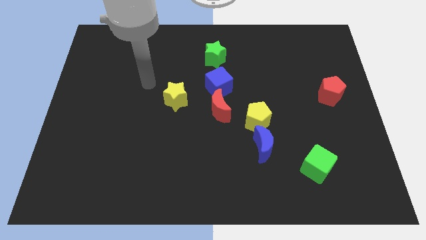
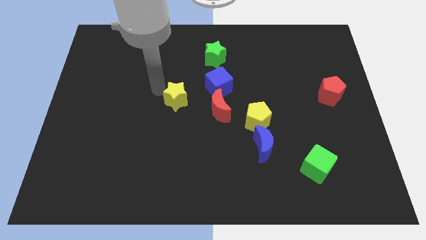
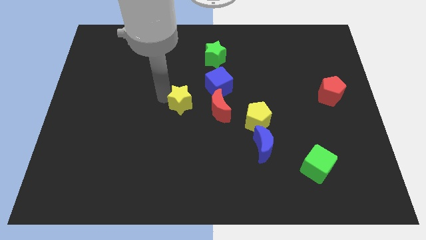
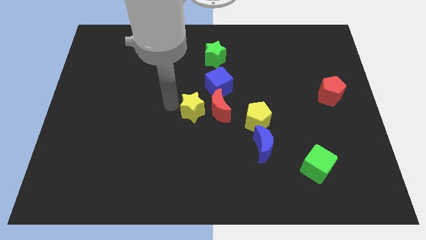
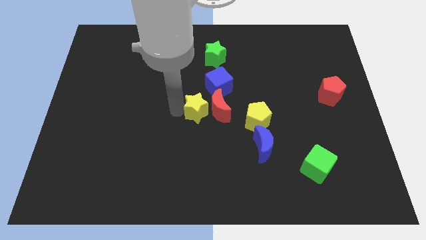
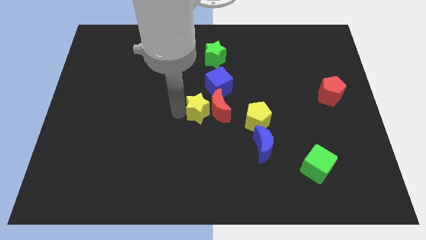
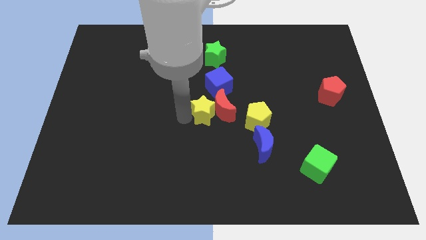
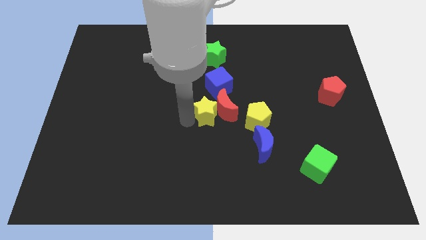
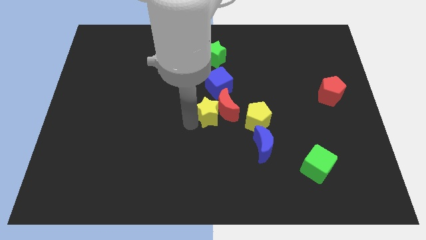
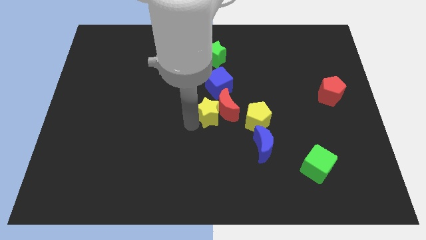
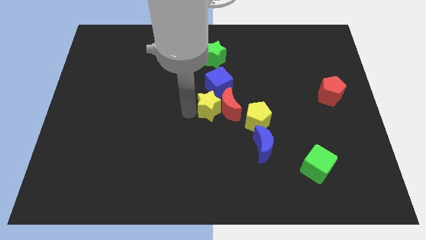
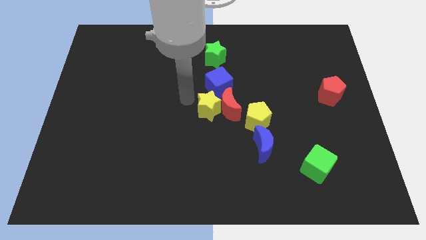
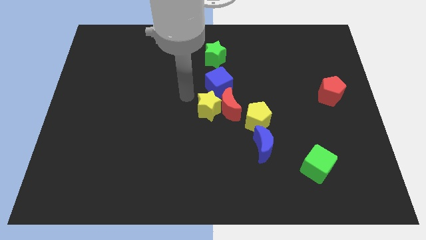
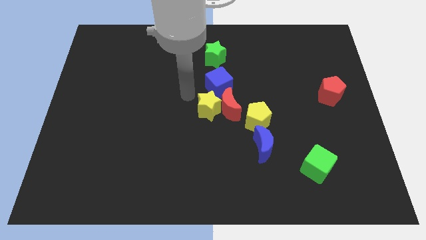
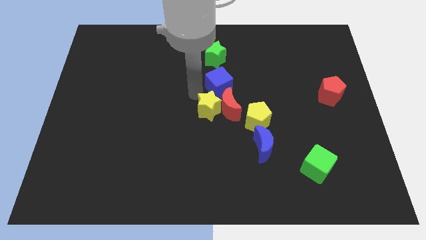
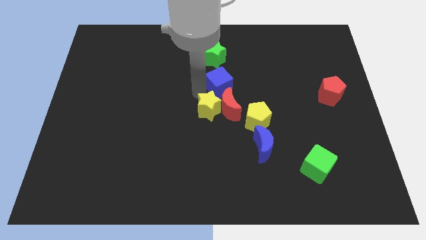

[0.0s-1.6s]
push the yellow star to the left of the red crescent

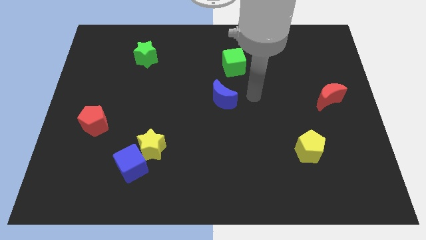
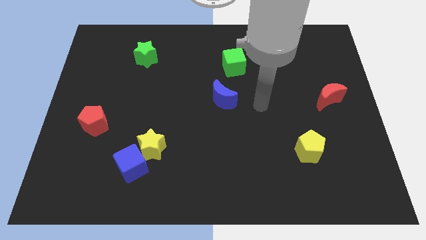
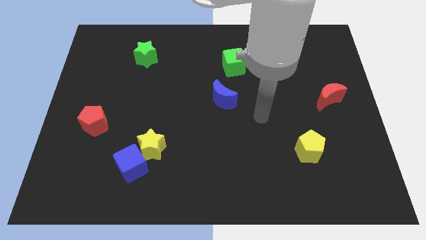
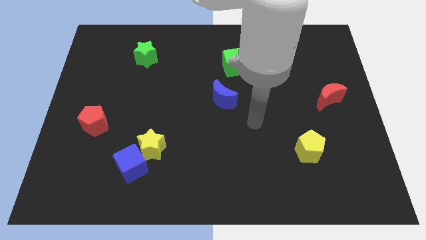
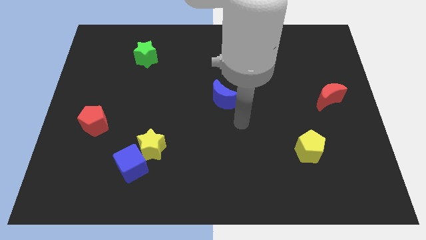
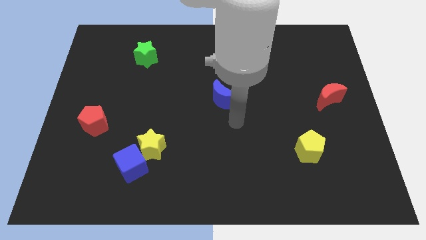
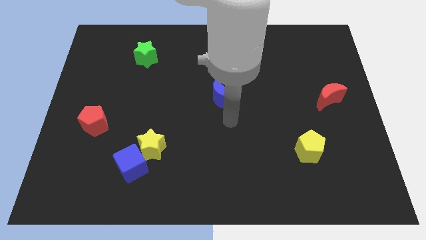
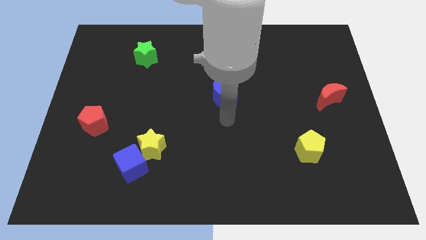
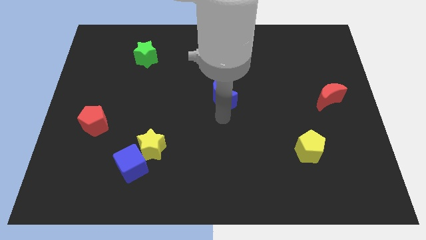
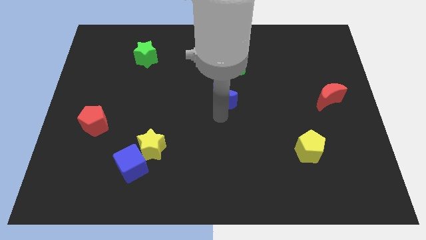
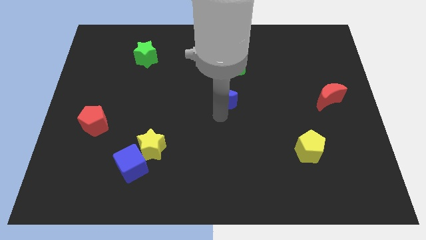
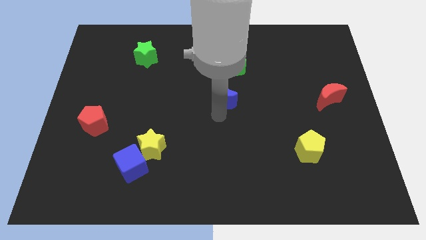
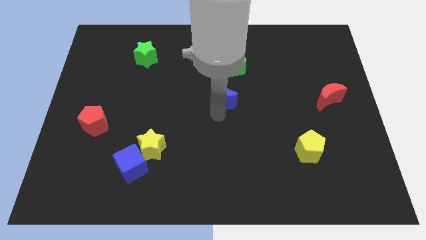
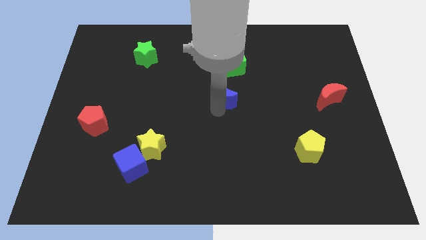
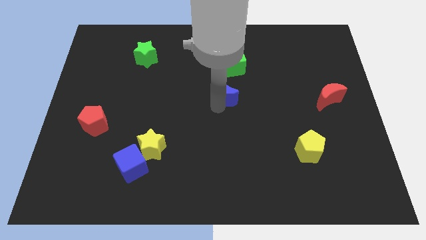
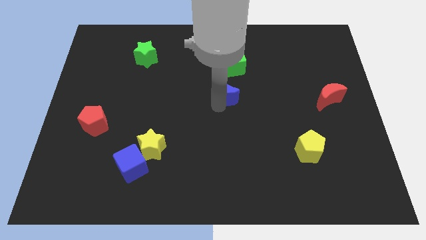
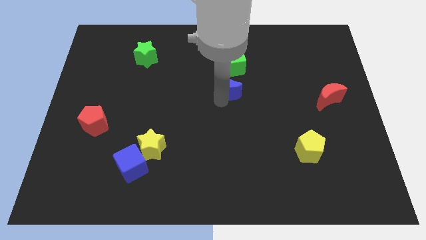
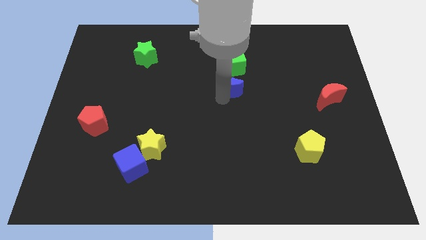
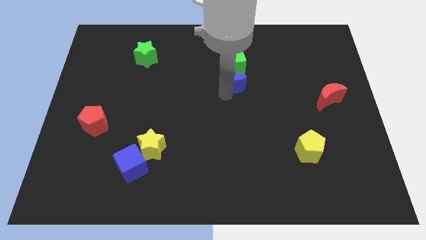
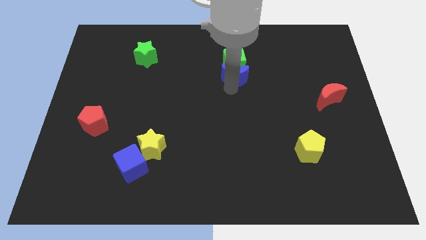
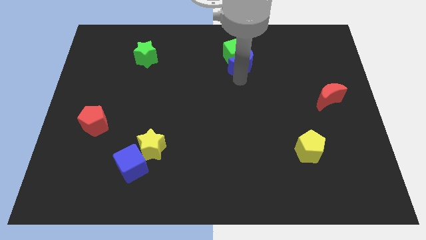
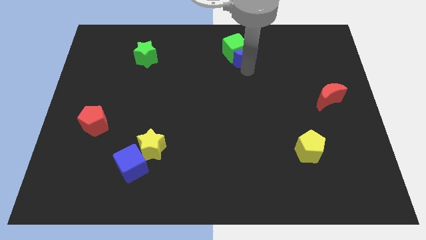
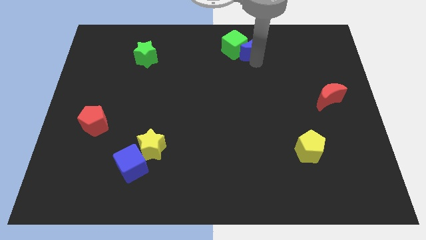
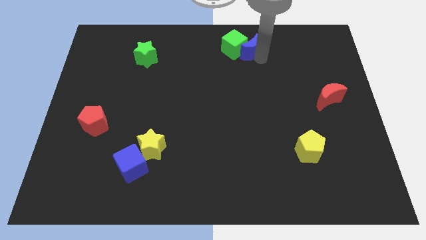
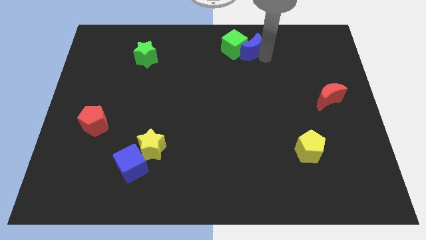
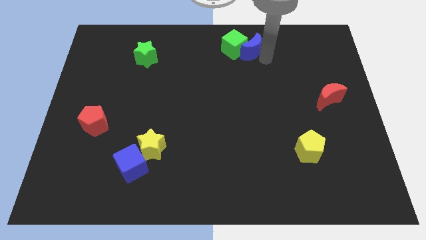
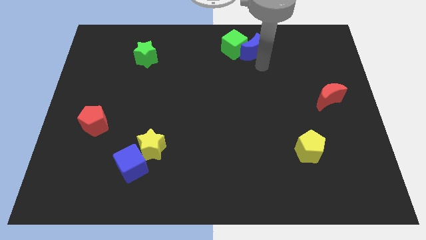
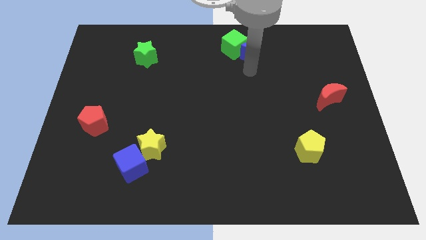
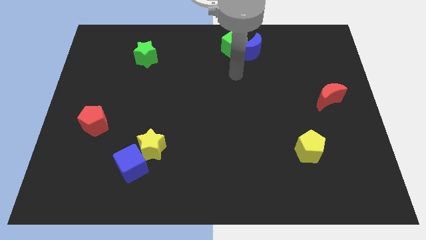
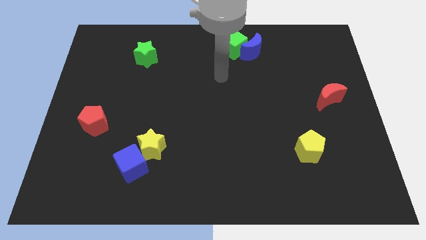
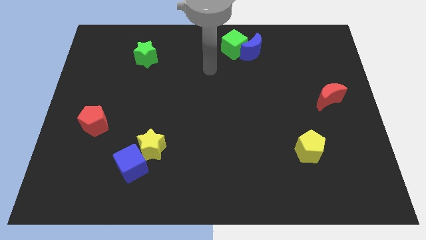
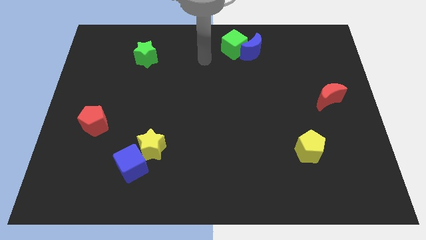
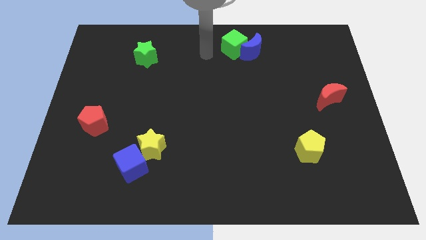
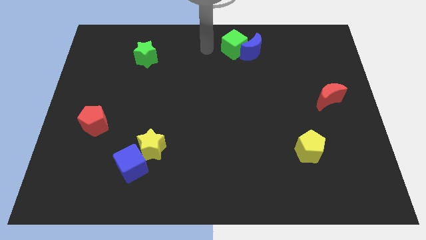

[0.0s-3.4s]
move blue crescent into the green cube

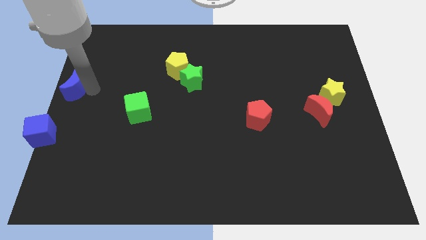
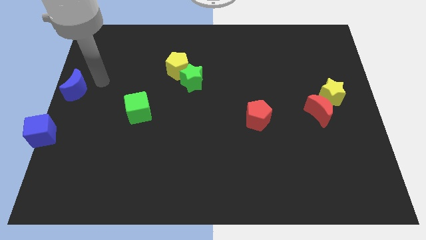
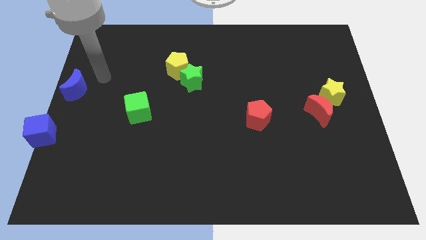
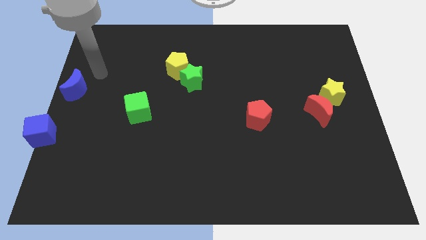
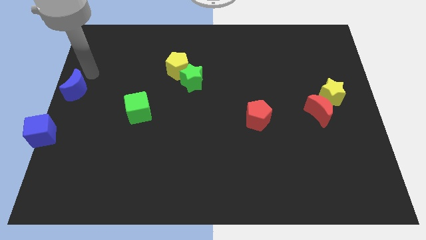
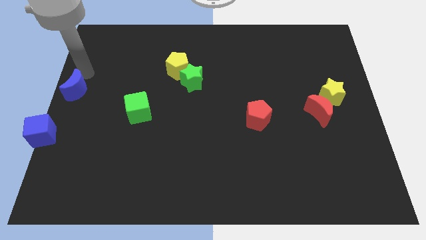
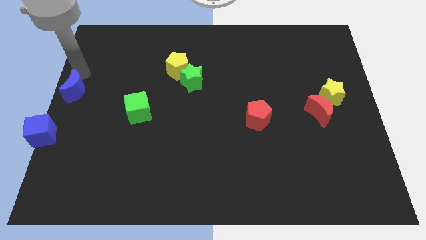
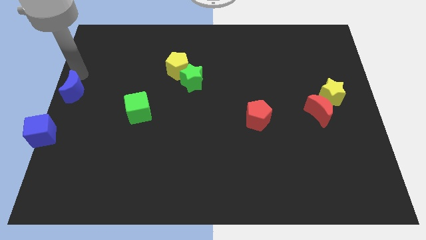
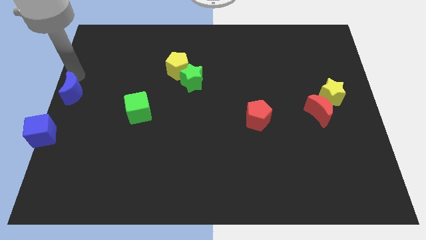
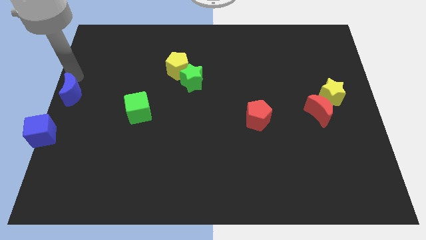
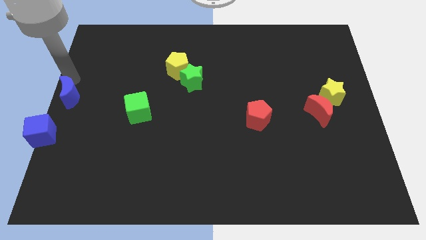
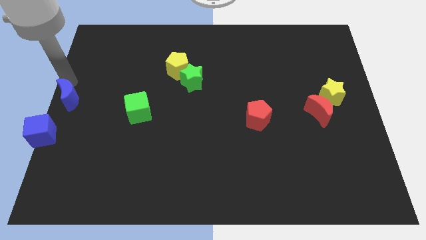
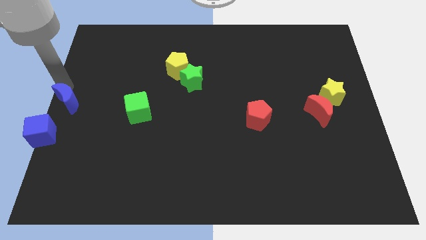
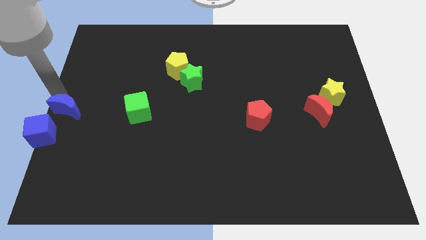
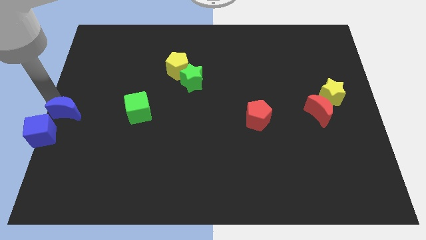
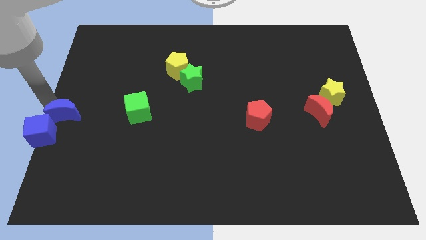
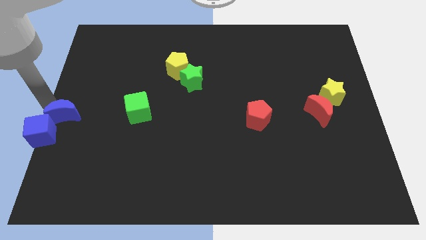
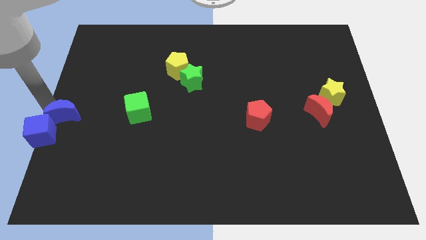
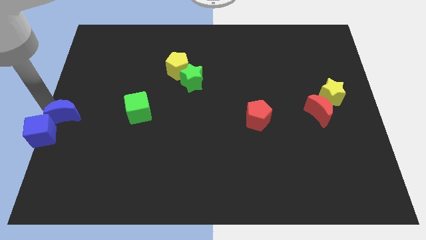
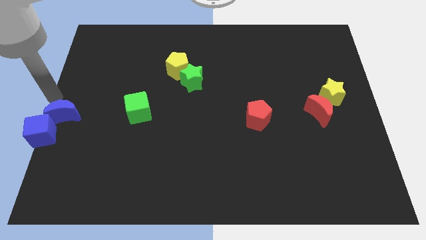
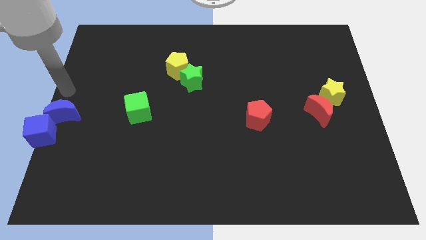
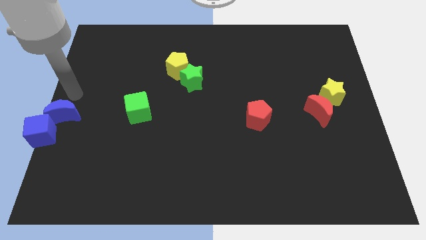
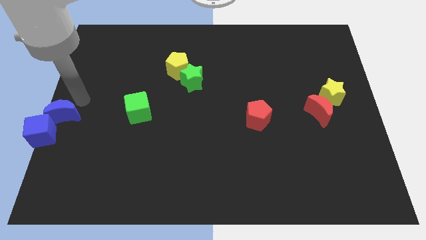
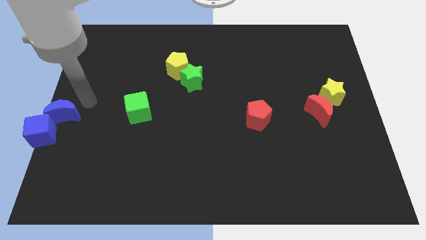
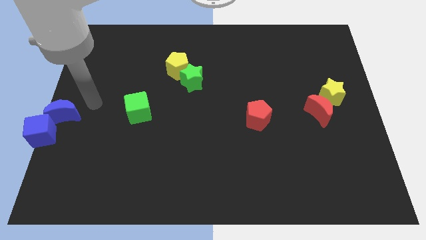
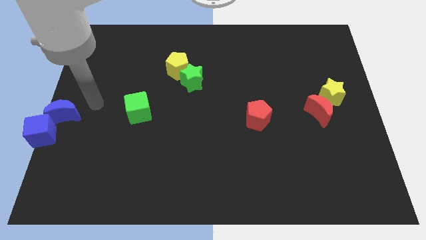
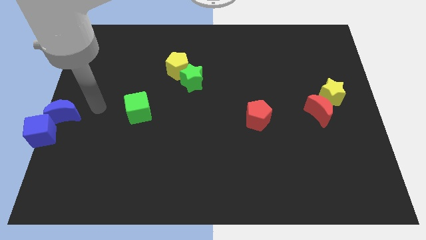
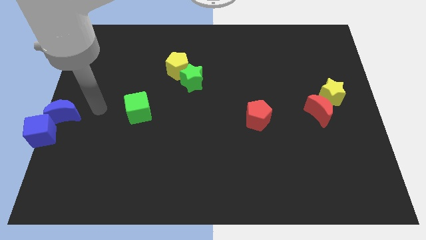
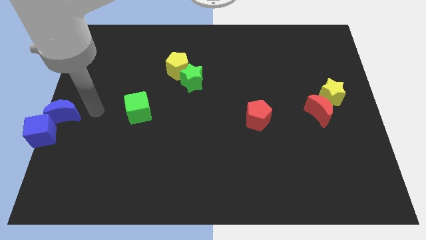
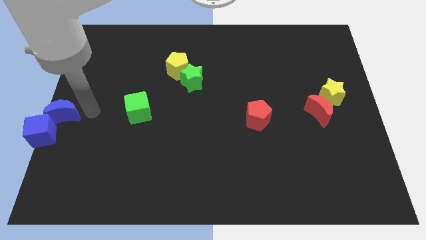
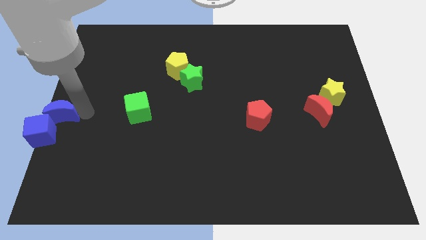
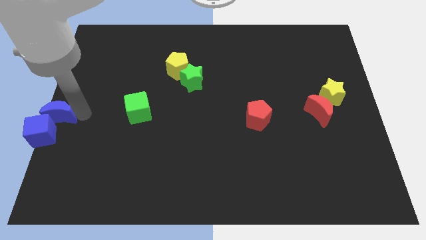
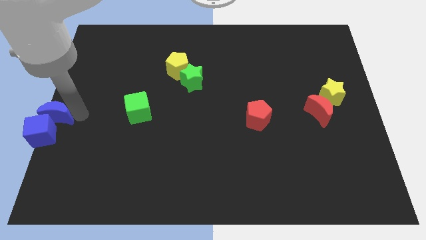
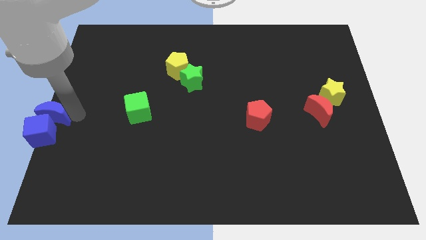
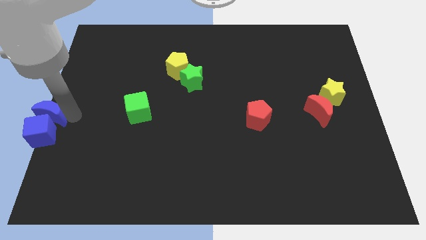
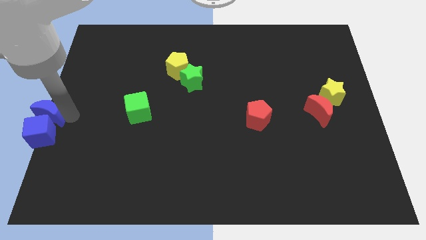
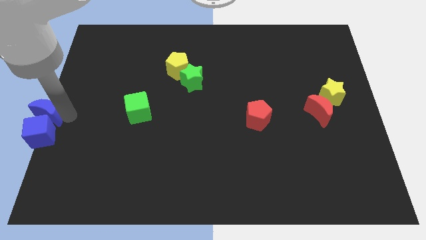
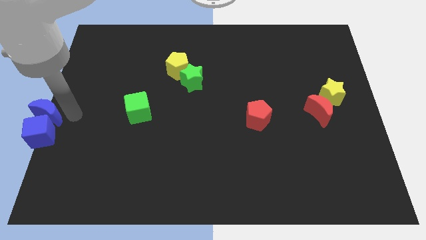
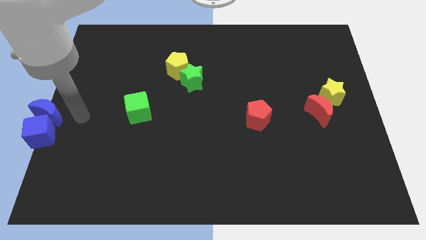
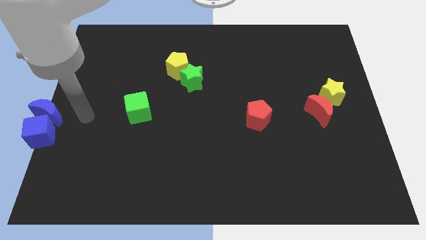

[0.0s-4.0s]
place the blue moon on top into blue cube
